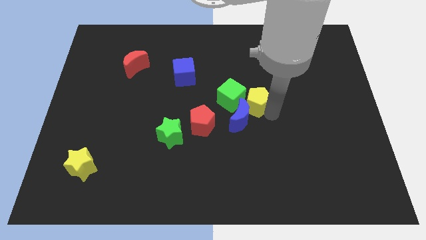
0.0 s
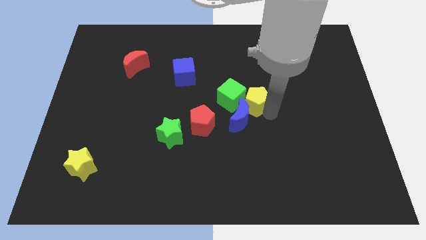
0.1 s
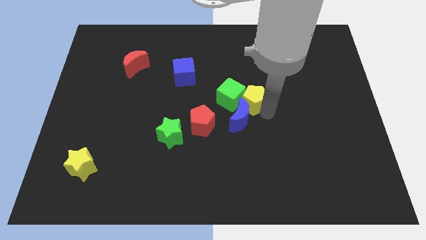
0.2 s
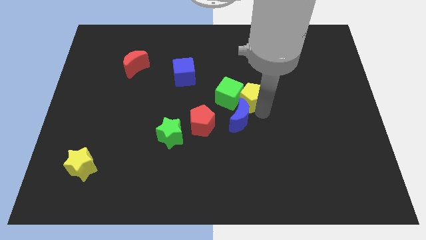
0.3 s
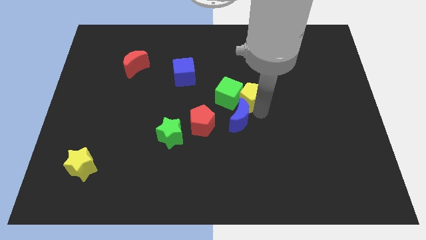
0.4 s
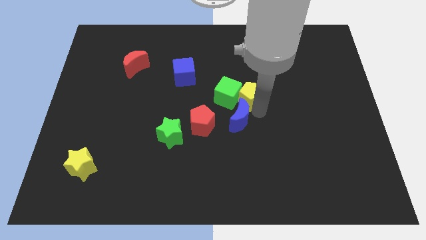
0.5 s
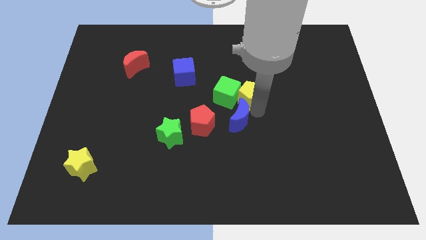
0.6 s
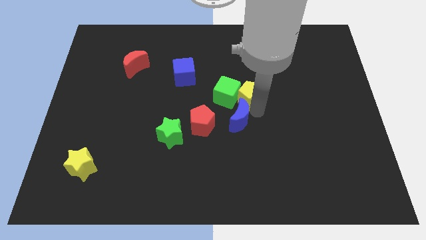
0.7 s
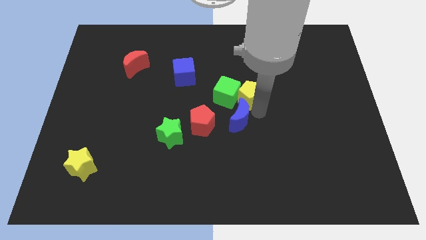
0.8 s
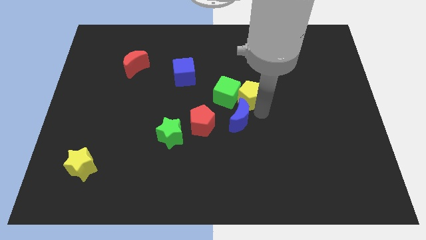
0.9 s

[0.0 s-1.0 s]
push the yellow pentagon into the green cube

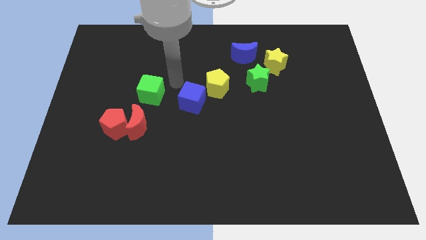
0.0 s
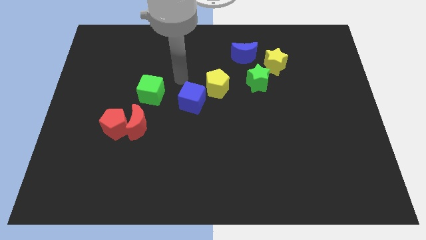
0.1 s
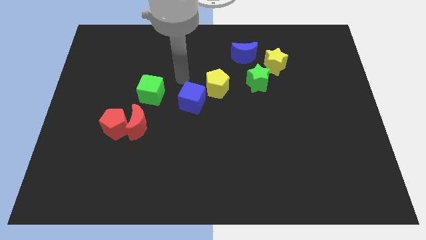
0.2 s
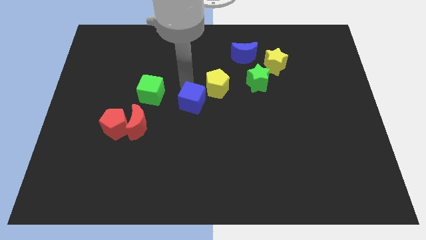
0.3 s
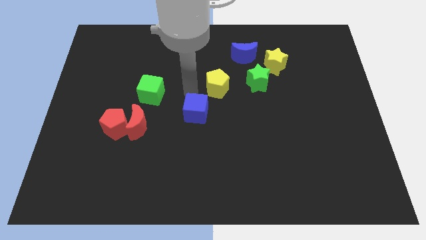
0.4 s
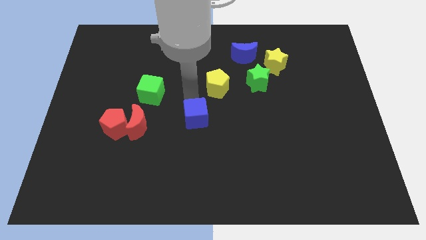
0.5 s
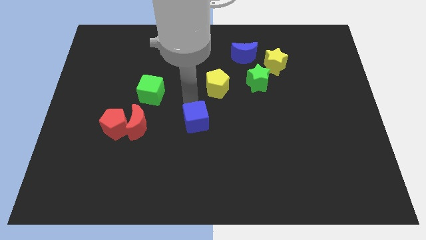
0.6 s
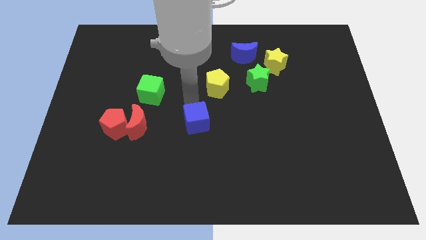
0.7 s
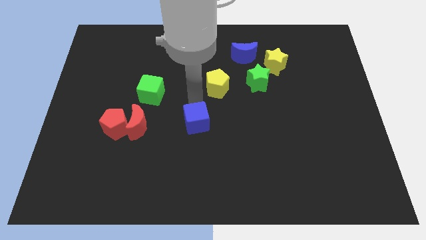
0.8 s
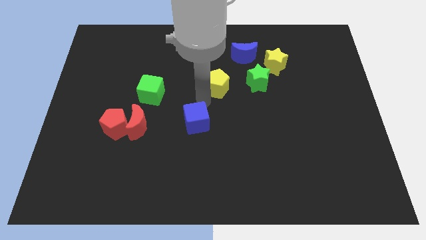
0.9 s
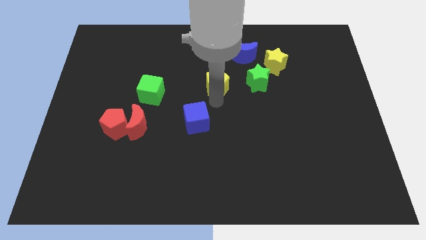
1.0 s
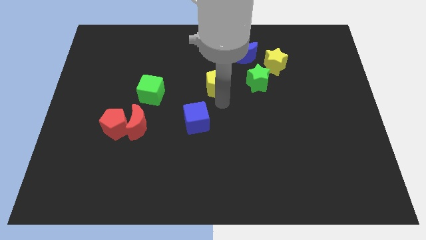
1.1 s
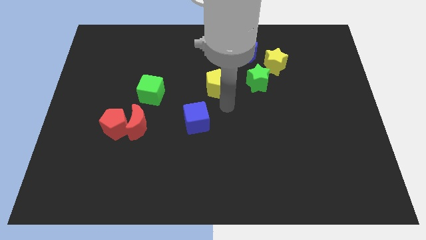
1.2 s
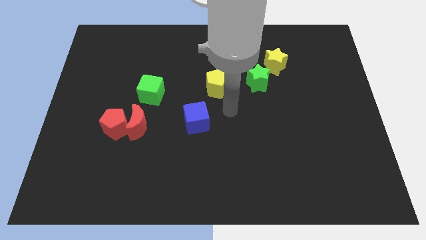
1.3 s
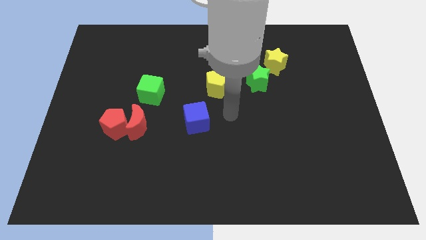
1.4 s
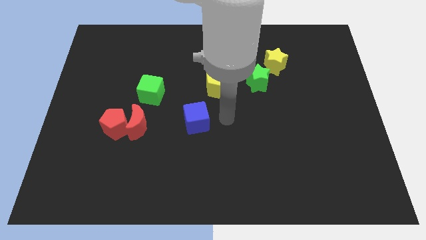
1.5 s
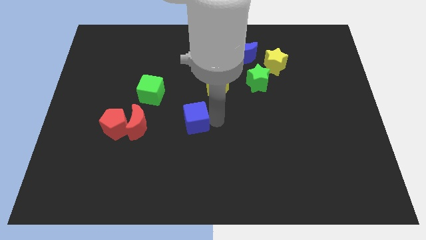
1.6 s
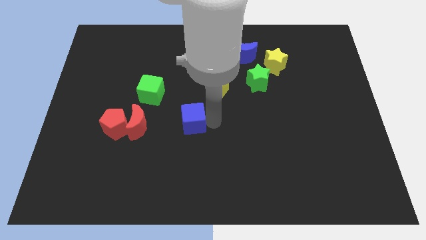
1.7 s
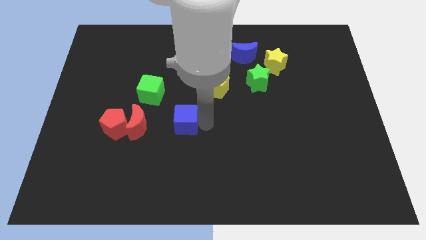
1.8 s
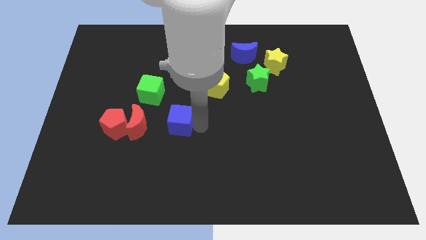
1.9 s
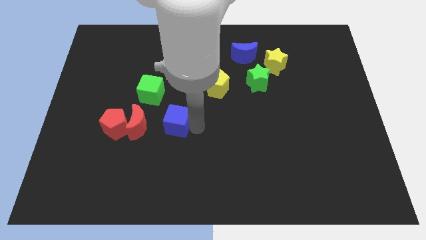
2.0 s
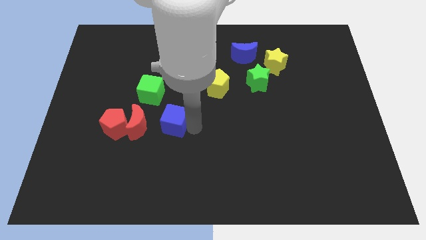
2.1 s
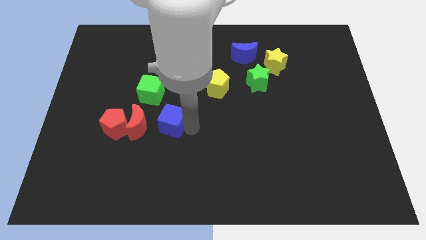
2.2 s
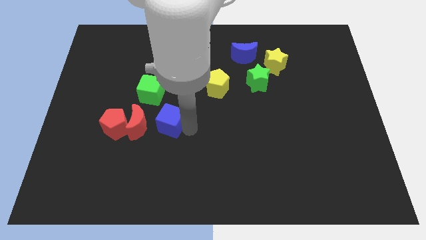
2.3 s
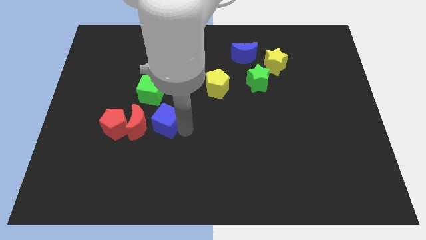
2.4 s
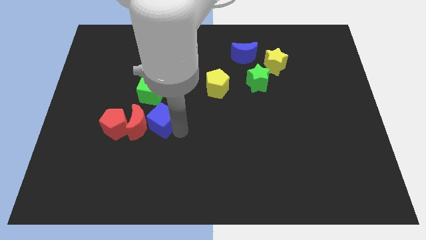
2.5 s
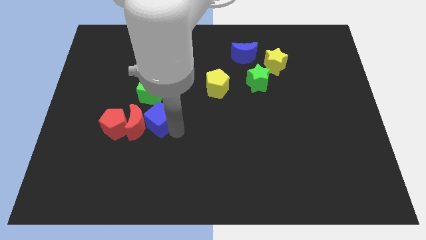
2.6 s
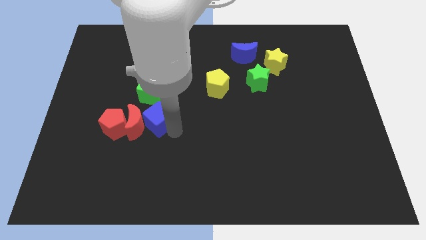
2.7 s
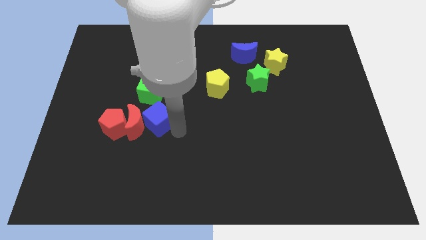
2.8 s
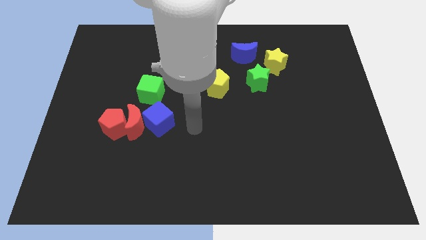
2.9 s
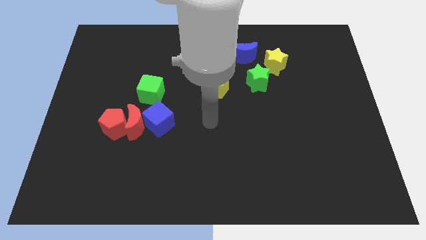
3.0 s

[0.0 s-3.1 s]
move the blue cube to the bottom of the green cube

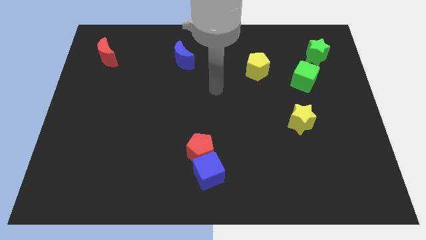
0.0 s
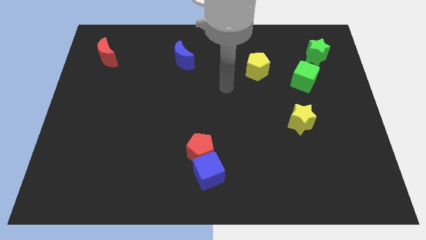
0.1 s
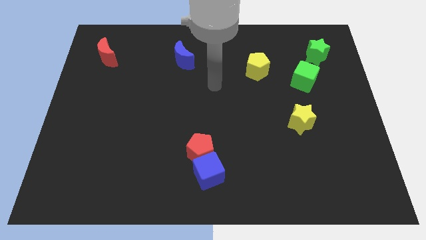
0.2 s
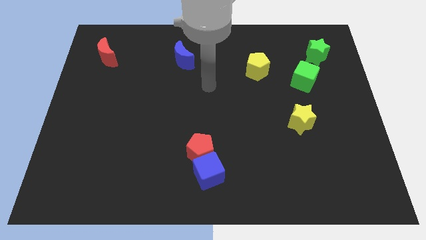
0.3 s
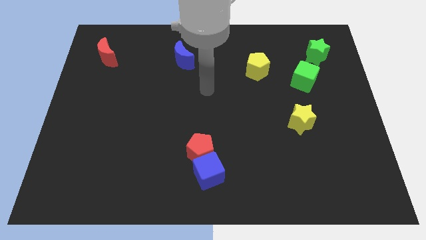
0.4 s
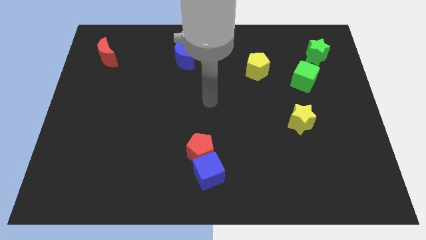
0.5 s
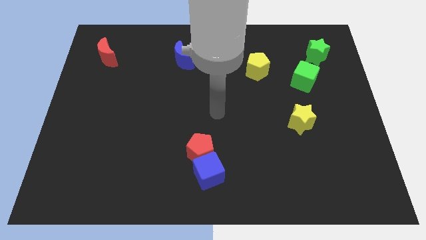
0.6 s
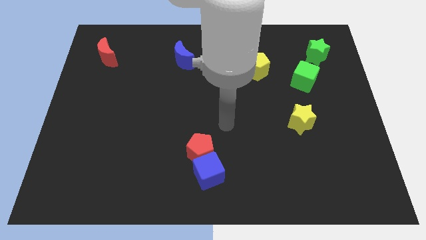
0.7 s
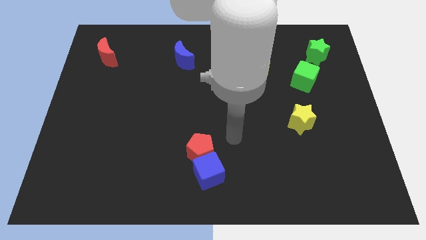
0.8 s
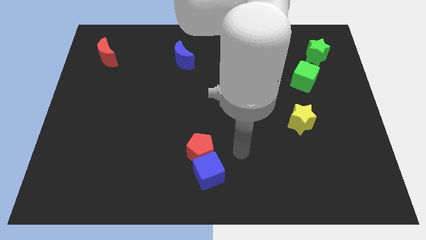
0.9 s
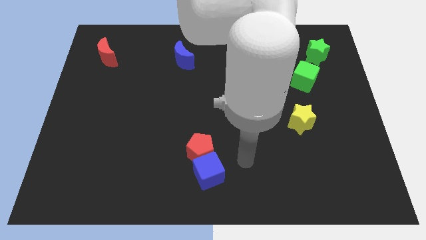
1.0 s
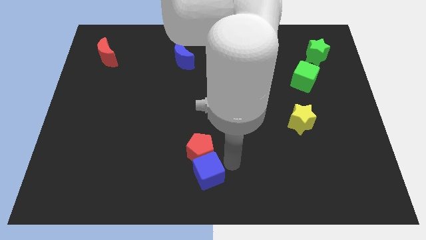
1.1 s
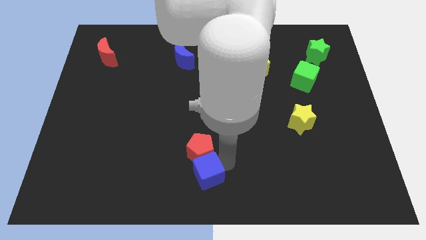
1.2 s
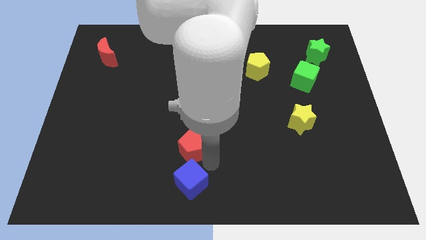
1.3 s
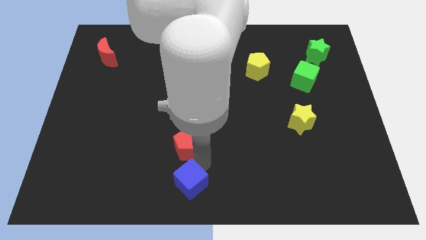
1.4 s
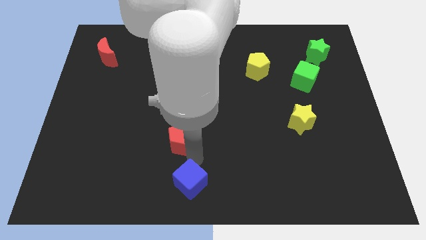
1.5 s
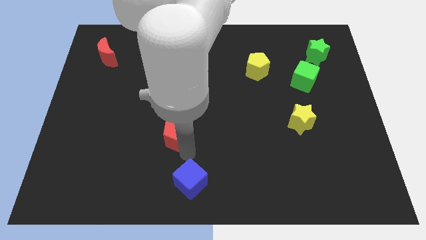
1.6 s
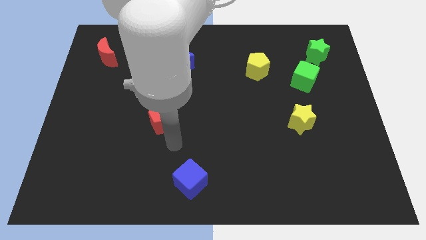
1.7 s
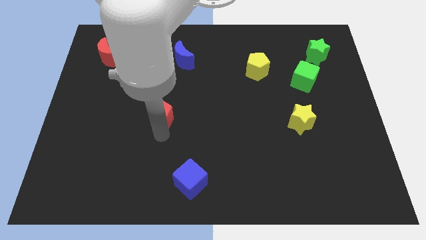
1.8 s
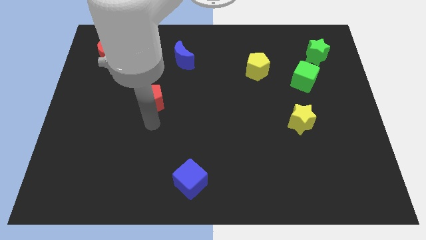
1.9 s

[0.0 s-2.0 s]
separate the red pentagon from blue cube

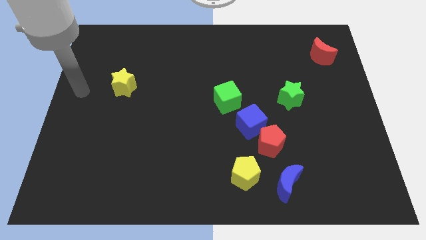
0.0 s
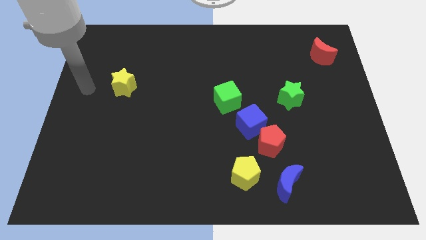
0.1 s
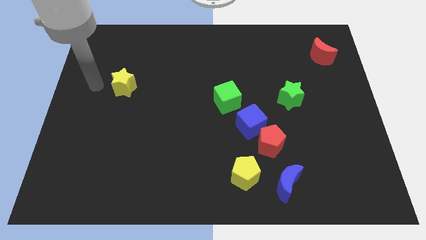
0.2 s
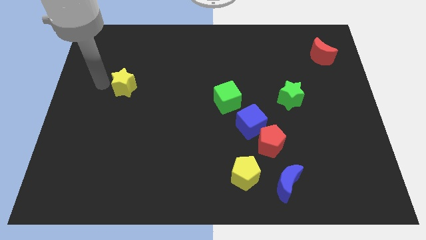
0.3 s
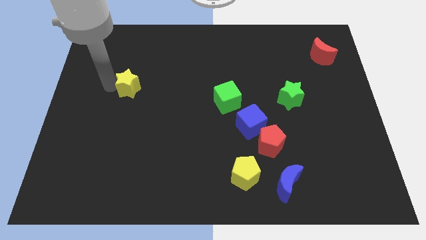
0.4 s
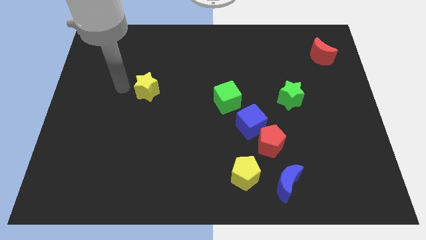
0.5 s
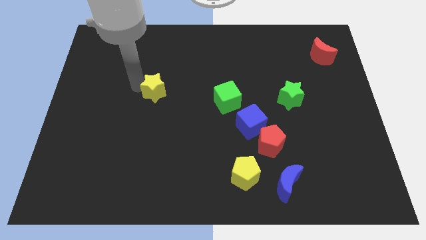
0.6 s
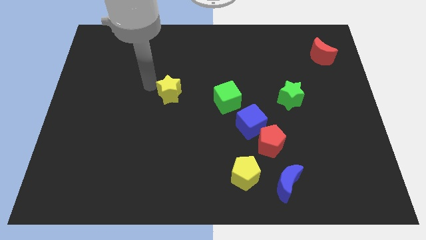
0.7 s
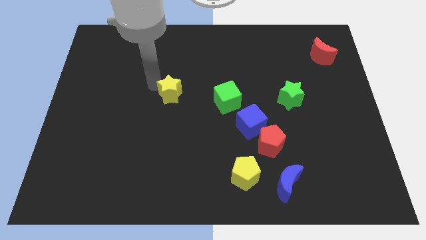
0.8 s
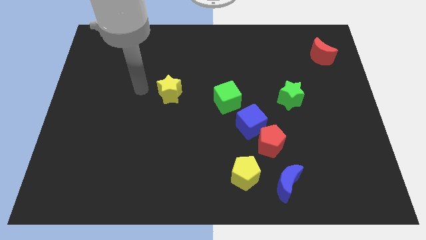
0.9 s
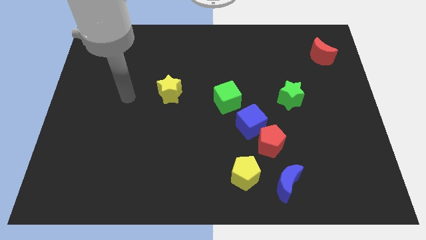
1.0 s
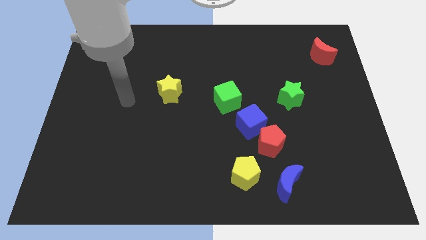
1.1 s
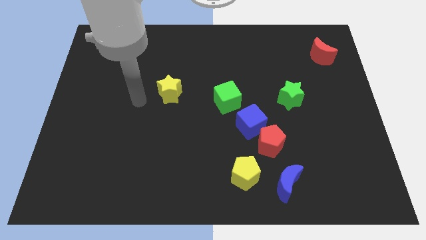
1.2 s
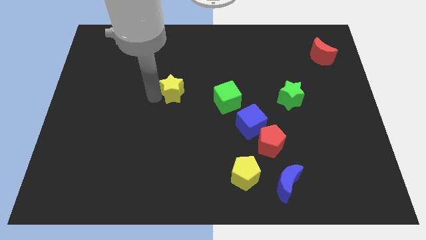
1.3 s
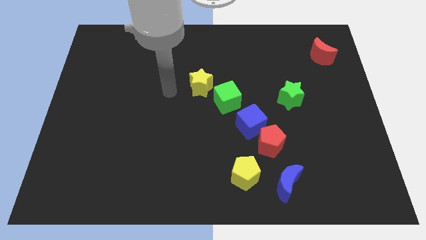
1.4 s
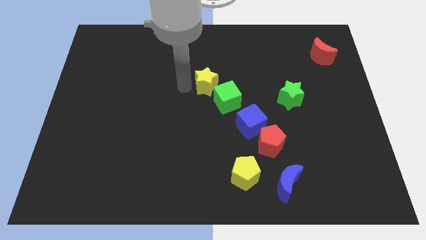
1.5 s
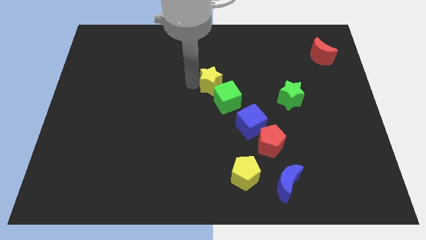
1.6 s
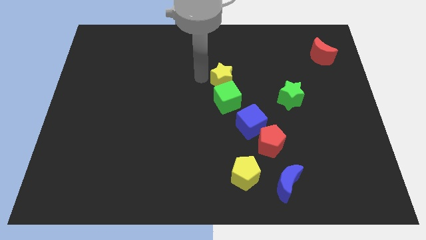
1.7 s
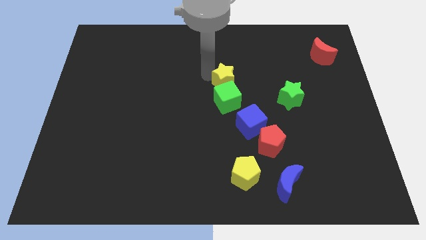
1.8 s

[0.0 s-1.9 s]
place the yellow star above the green cube

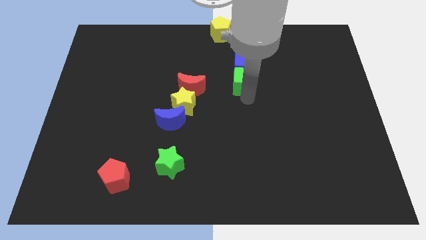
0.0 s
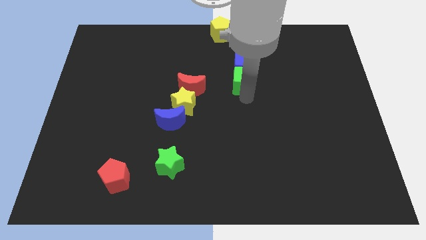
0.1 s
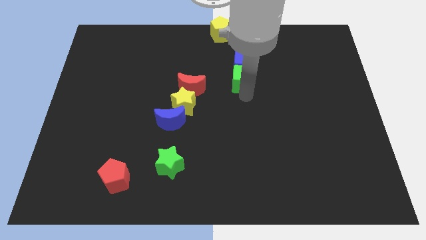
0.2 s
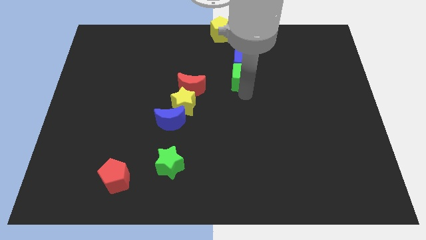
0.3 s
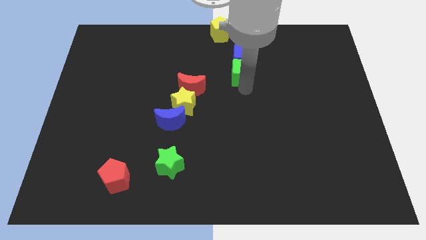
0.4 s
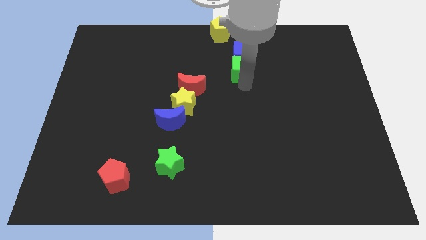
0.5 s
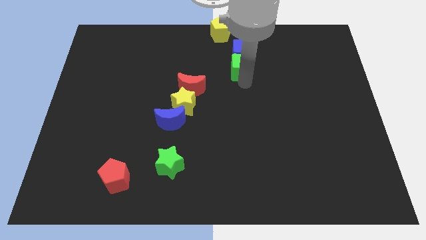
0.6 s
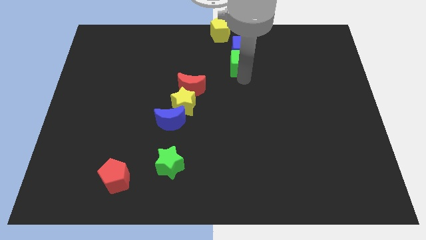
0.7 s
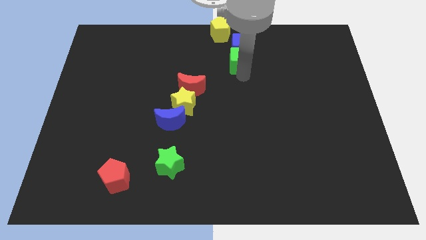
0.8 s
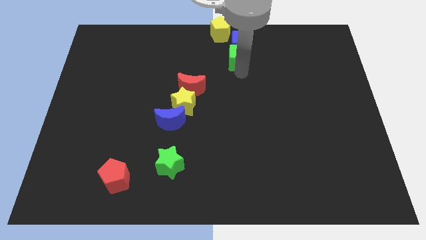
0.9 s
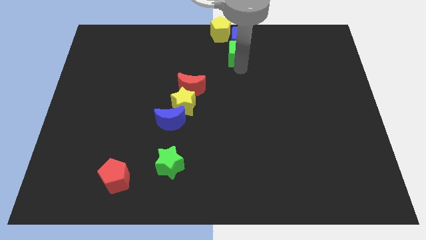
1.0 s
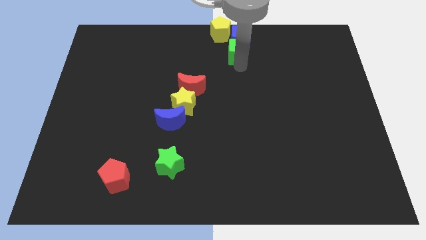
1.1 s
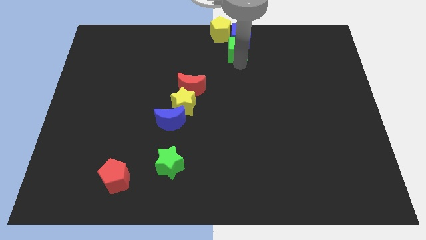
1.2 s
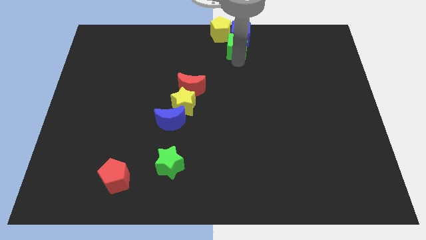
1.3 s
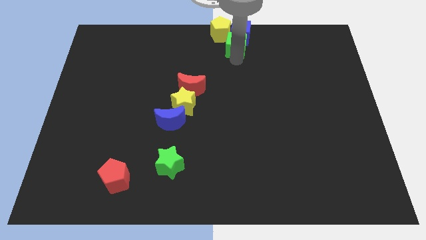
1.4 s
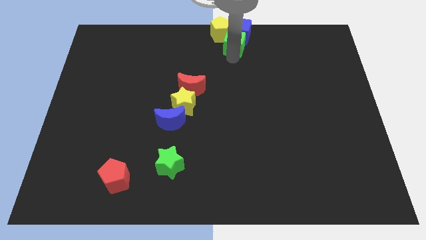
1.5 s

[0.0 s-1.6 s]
push the green cube along with the blue cube close to the yellow pentagon
